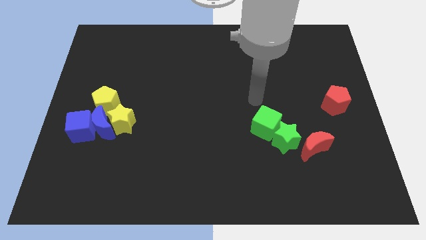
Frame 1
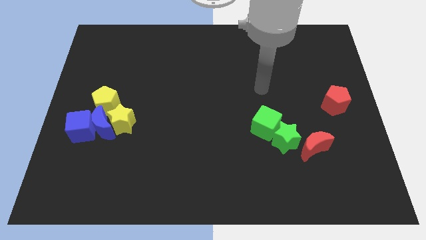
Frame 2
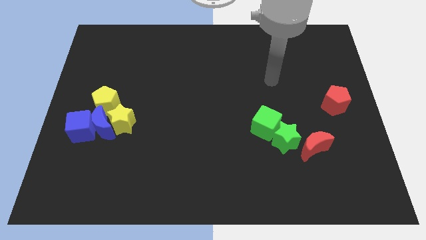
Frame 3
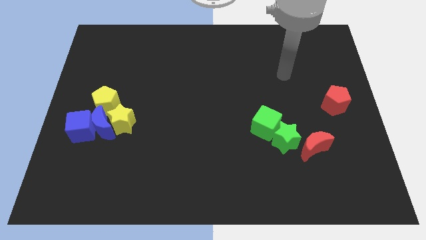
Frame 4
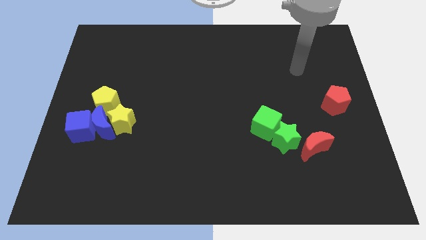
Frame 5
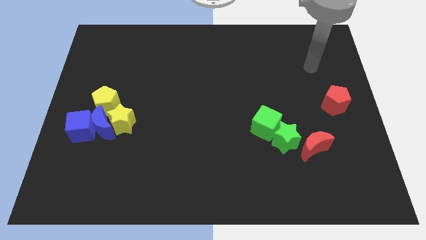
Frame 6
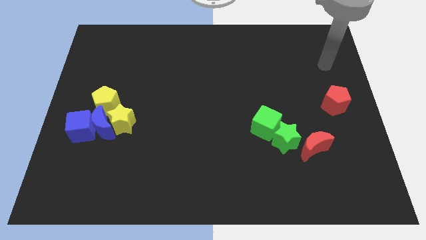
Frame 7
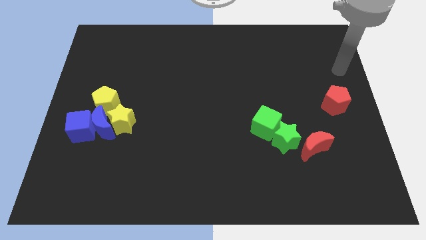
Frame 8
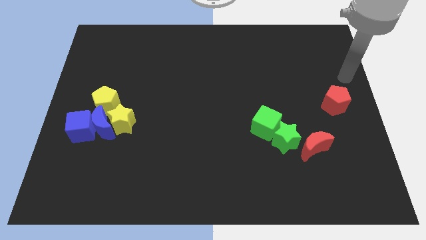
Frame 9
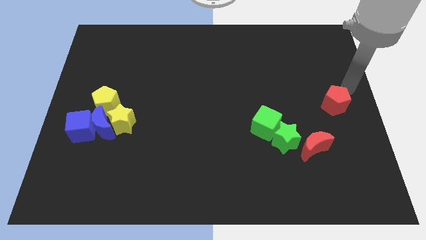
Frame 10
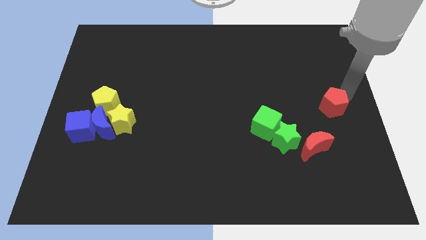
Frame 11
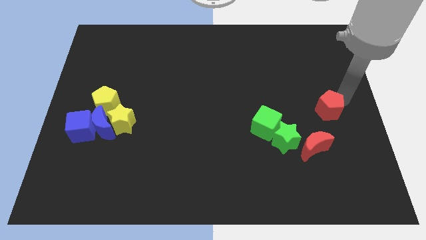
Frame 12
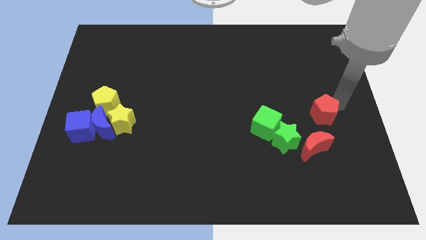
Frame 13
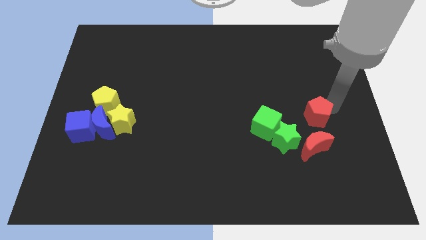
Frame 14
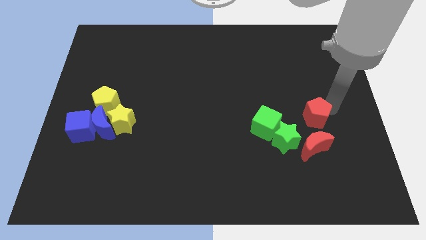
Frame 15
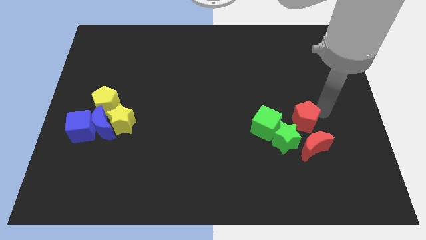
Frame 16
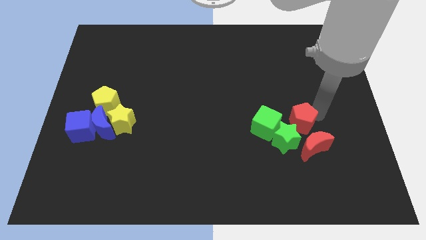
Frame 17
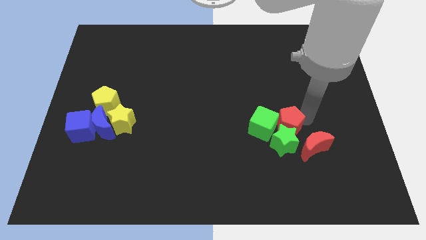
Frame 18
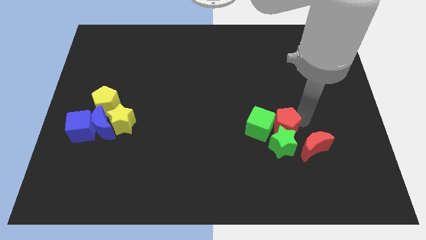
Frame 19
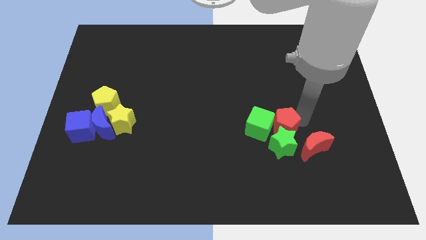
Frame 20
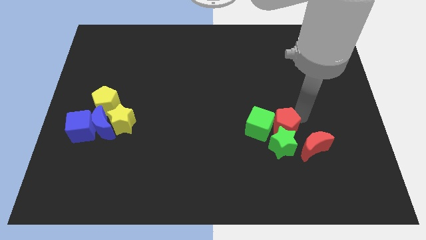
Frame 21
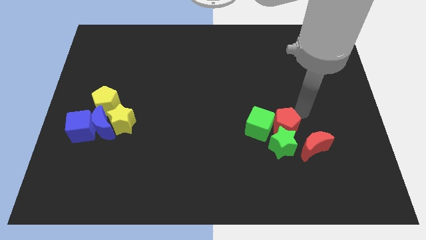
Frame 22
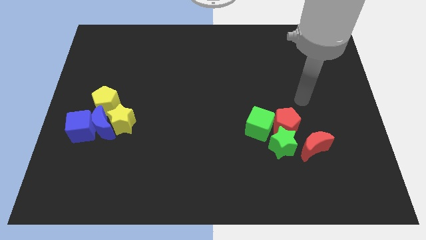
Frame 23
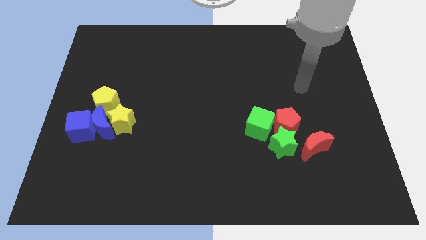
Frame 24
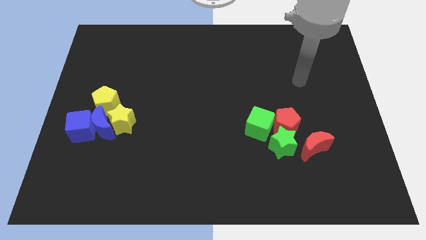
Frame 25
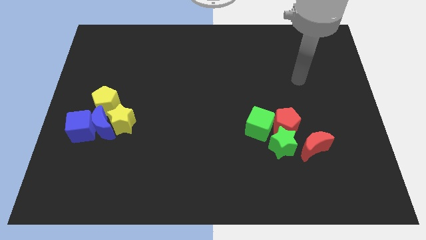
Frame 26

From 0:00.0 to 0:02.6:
push the red pentagon into the green star and green cube

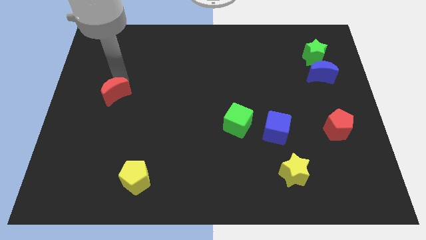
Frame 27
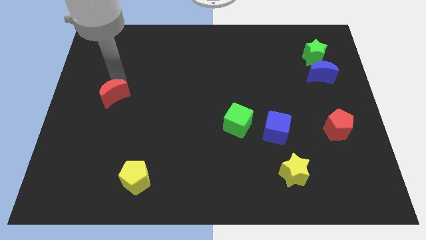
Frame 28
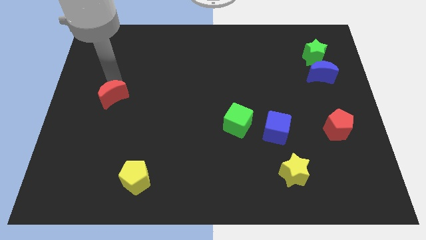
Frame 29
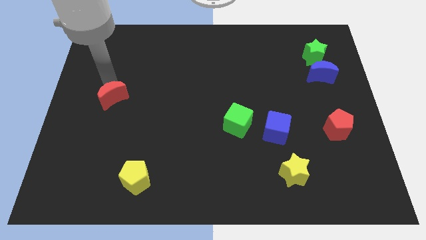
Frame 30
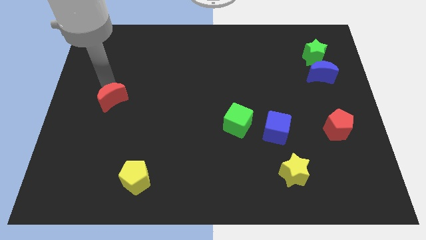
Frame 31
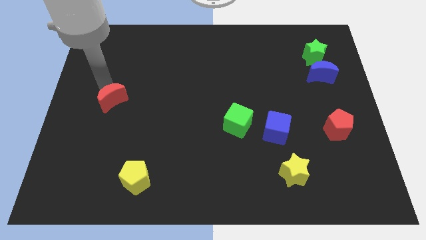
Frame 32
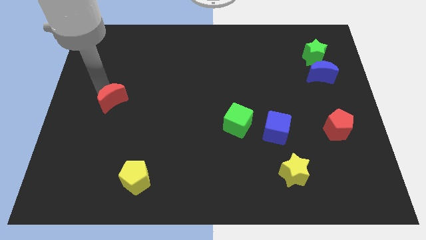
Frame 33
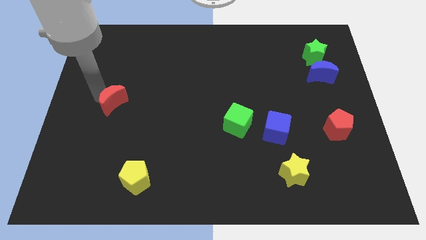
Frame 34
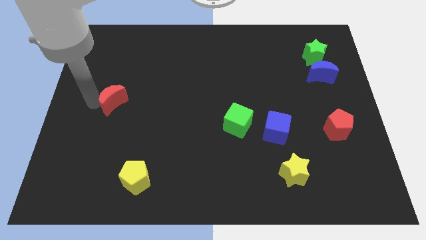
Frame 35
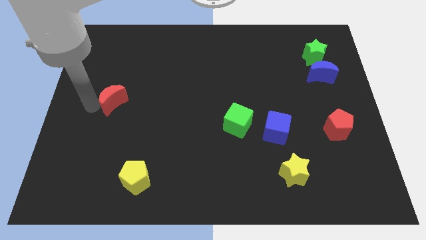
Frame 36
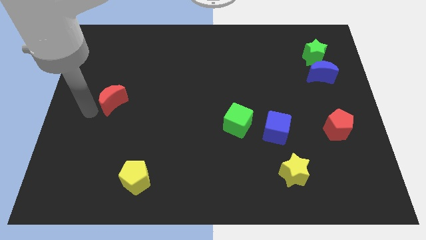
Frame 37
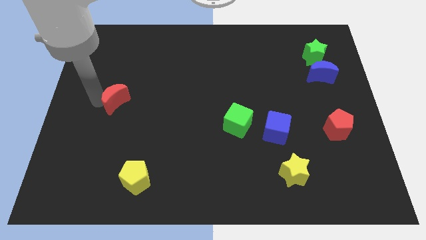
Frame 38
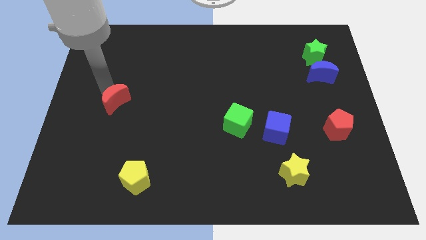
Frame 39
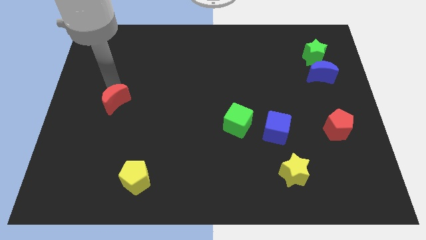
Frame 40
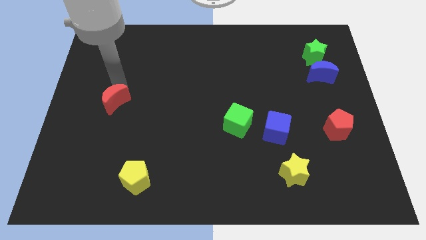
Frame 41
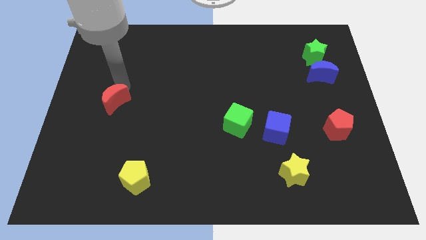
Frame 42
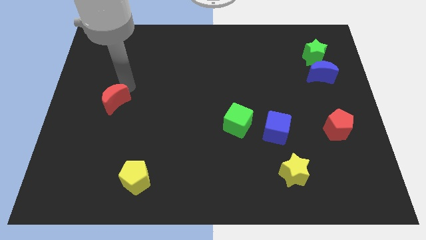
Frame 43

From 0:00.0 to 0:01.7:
move red moon slightly to the bottom side of the board

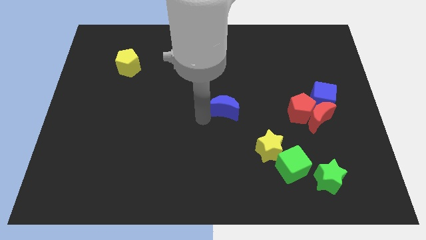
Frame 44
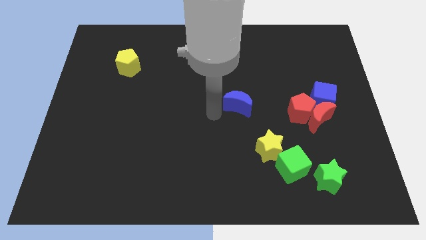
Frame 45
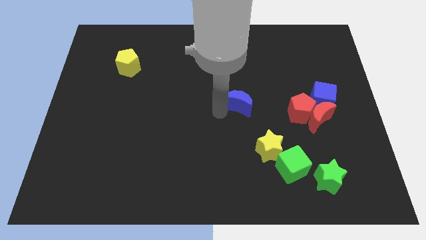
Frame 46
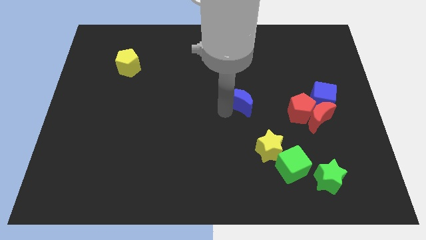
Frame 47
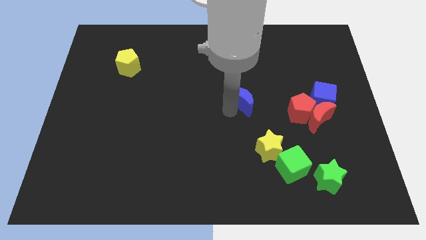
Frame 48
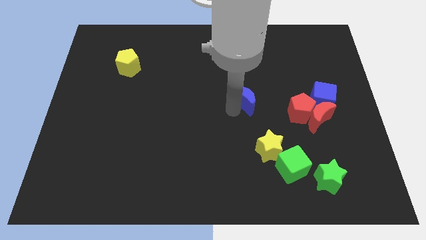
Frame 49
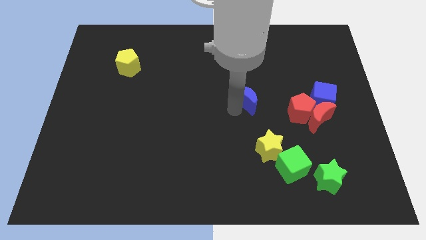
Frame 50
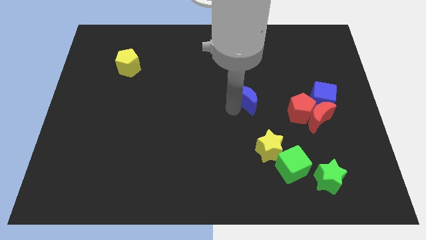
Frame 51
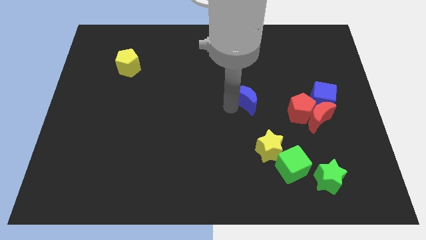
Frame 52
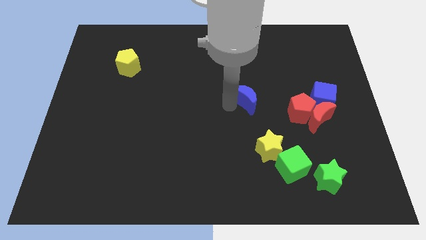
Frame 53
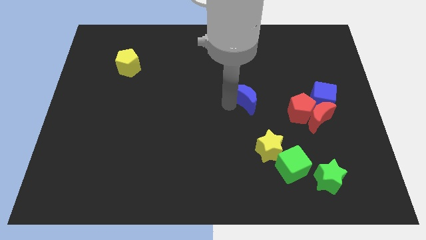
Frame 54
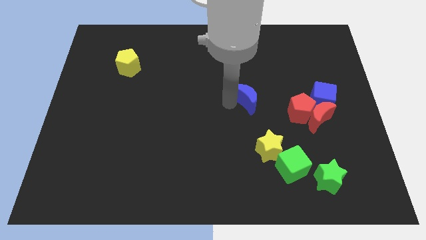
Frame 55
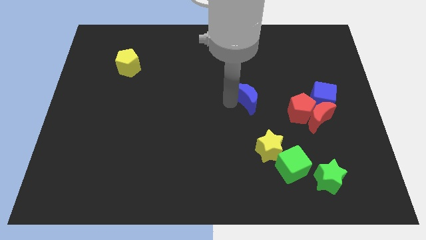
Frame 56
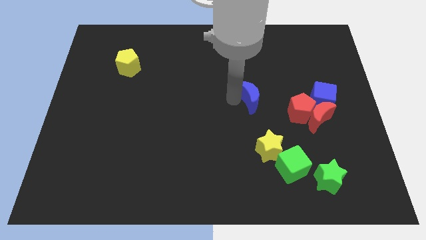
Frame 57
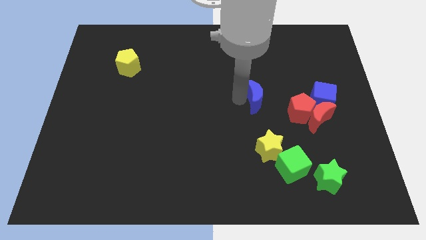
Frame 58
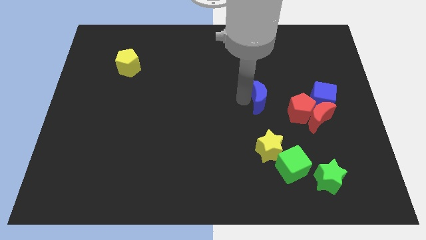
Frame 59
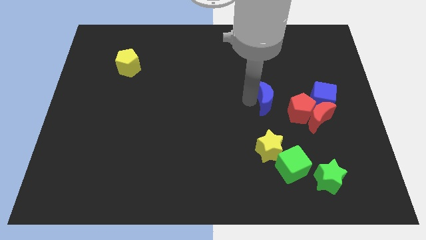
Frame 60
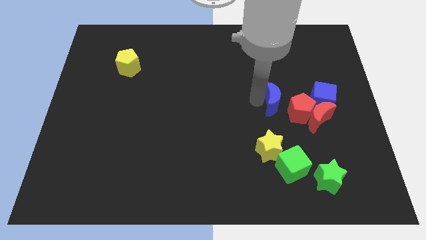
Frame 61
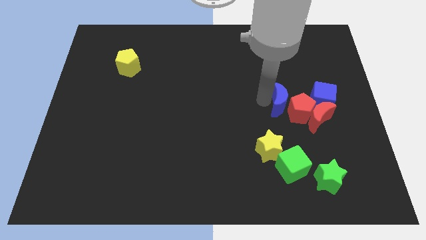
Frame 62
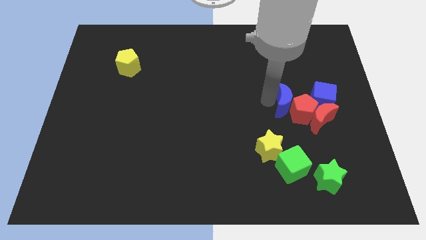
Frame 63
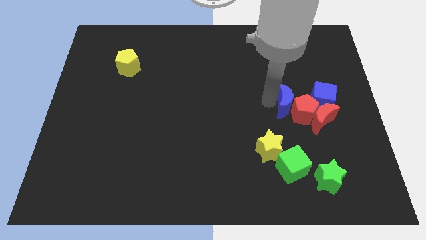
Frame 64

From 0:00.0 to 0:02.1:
move blue moon into red pentagon

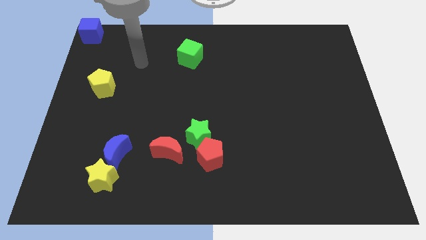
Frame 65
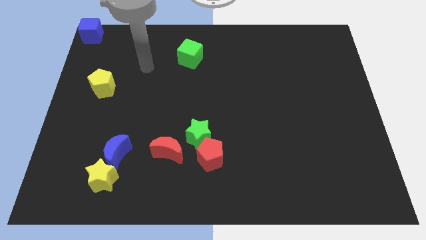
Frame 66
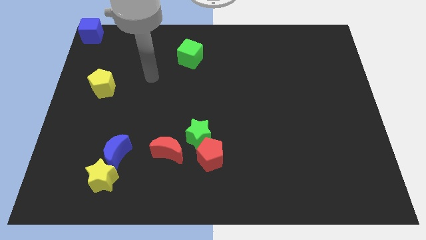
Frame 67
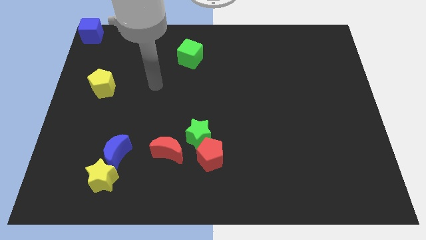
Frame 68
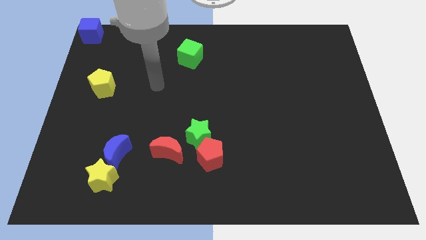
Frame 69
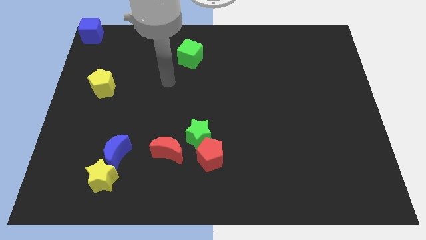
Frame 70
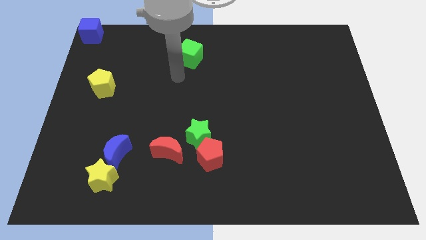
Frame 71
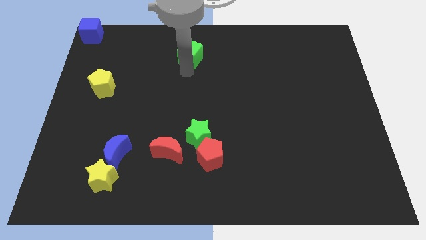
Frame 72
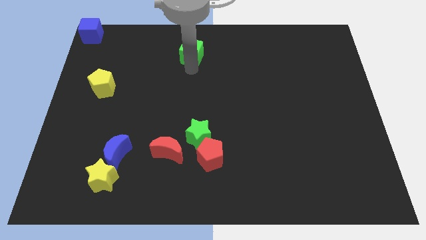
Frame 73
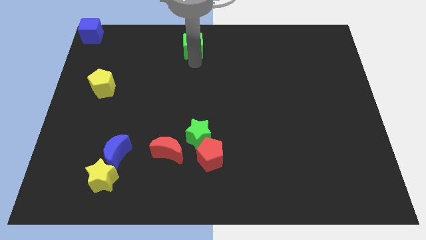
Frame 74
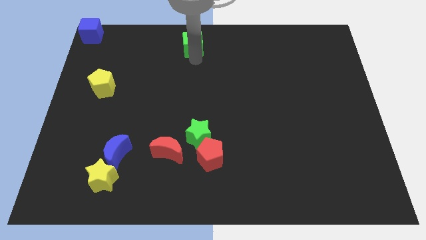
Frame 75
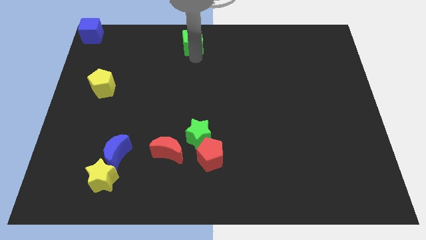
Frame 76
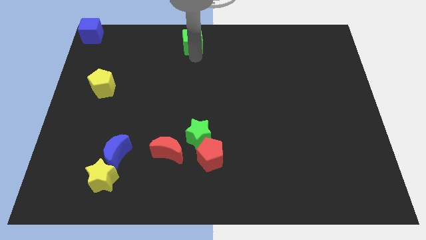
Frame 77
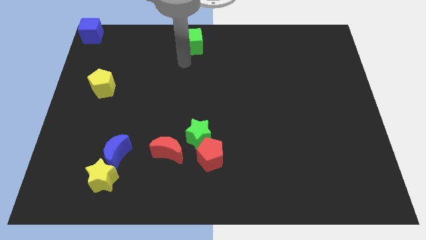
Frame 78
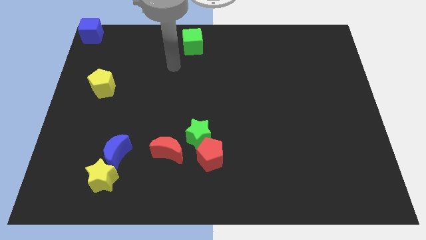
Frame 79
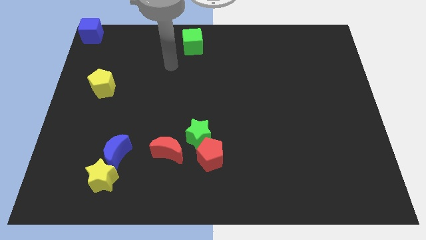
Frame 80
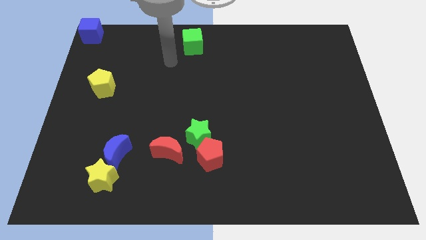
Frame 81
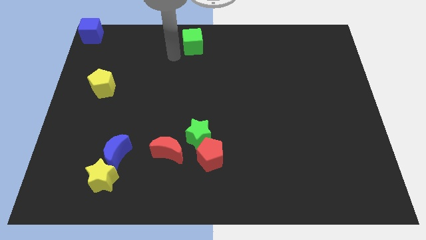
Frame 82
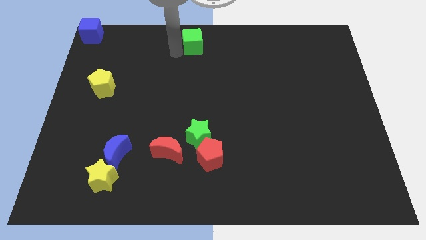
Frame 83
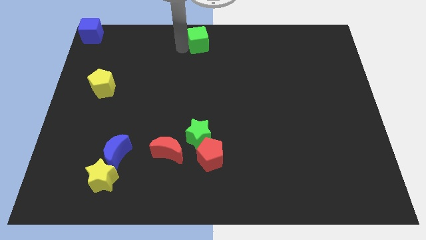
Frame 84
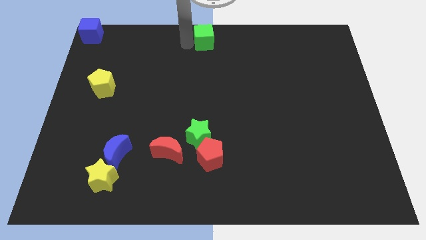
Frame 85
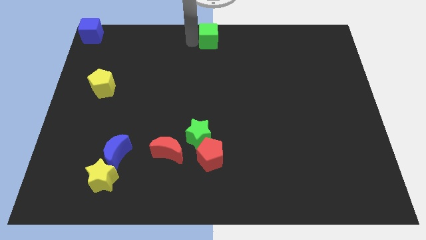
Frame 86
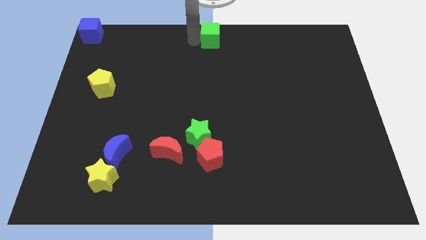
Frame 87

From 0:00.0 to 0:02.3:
place the green cube at the top center of the board
